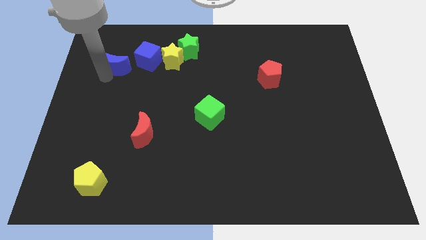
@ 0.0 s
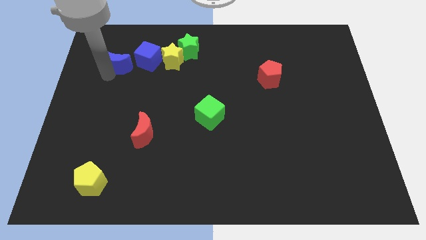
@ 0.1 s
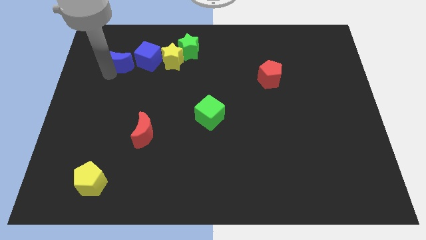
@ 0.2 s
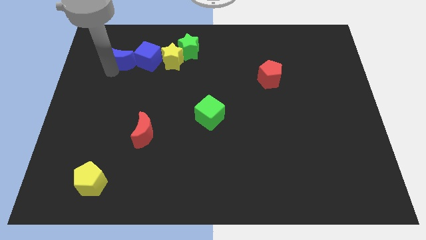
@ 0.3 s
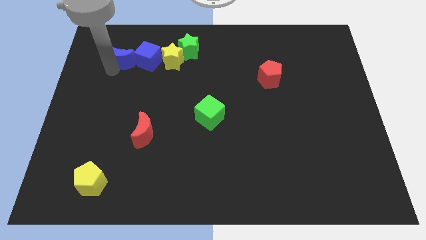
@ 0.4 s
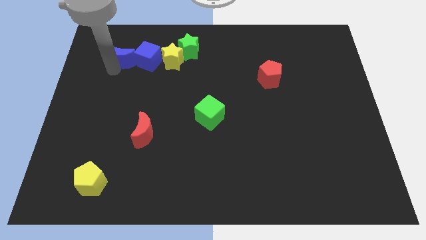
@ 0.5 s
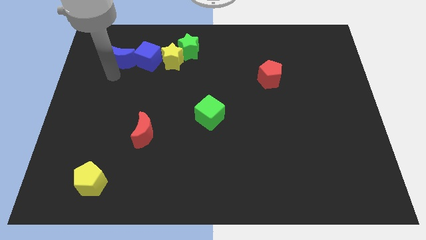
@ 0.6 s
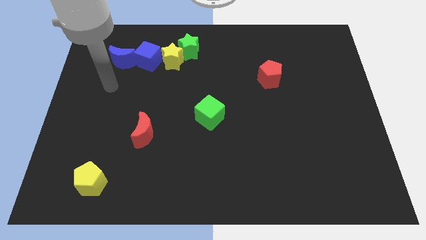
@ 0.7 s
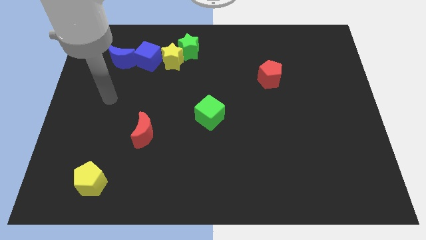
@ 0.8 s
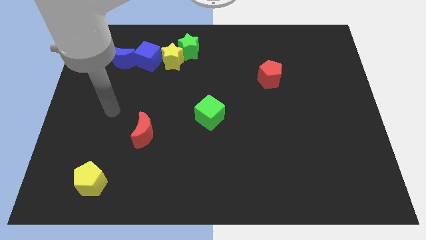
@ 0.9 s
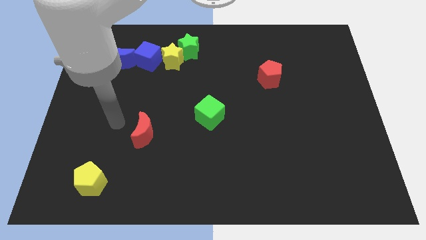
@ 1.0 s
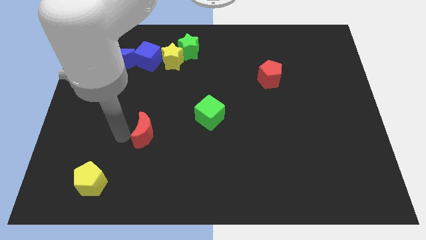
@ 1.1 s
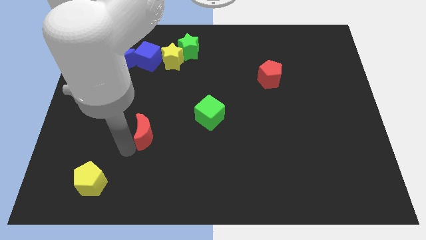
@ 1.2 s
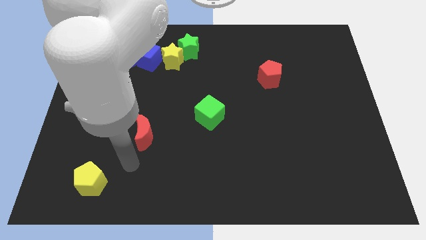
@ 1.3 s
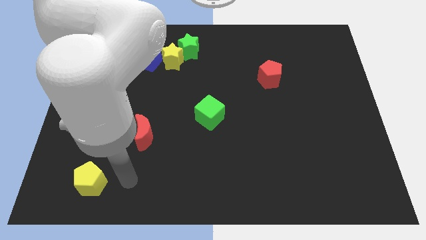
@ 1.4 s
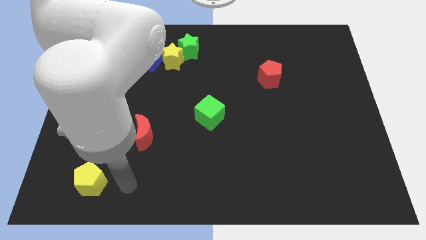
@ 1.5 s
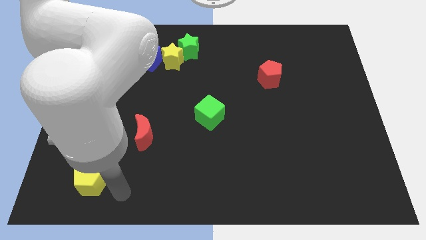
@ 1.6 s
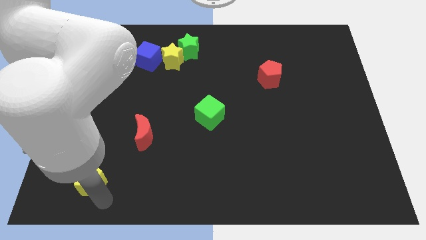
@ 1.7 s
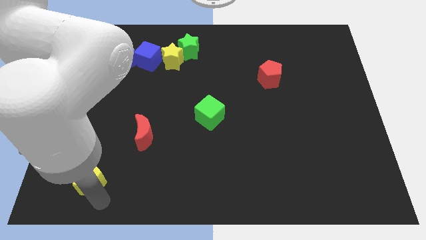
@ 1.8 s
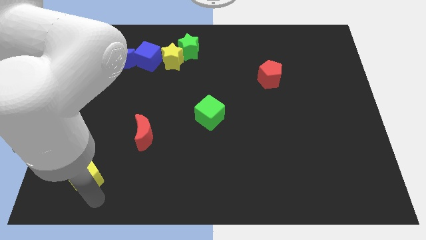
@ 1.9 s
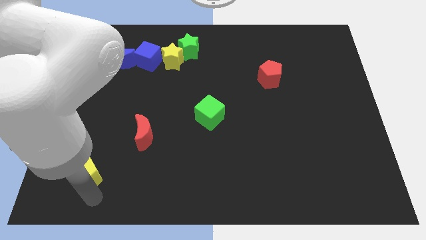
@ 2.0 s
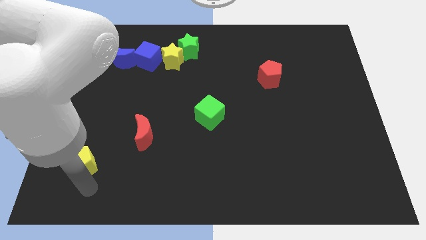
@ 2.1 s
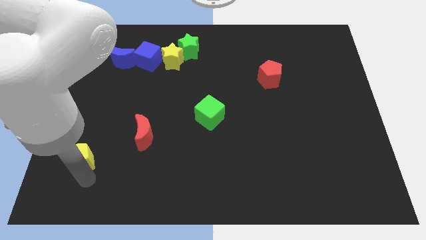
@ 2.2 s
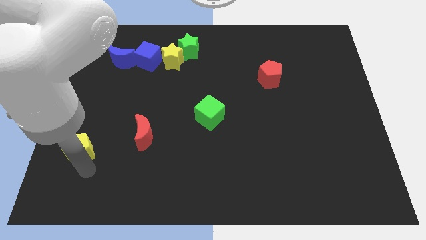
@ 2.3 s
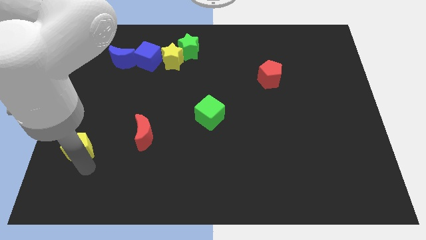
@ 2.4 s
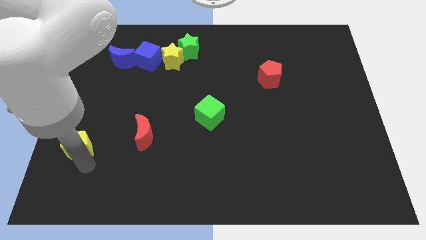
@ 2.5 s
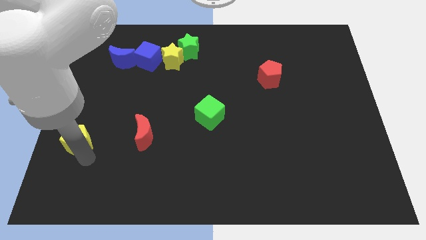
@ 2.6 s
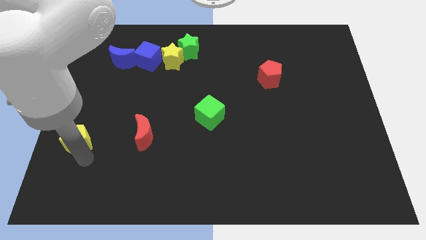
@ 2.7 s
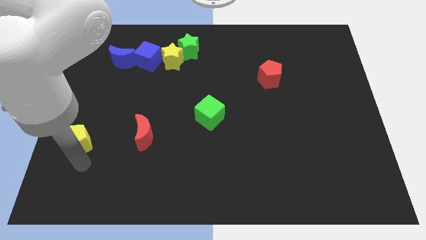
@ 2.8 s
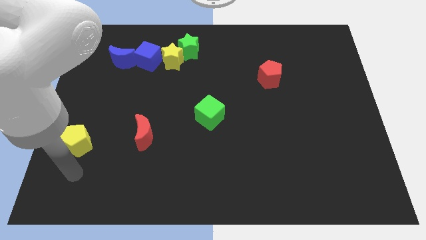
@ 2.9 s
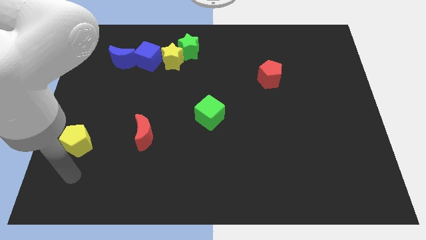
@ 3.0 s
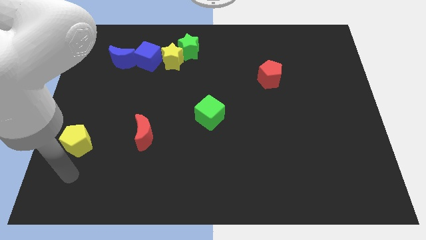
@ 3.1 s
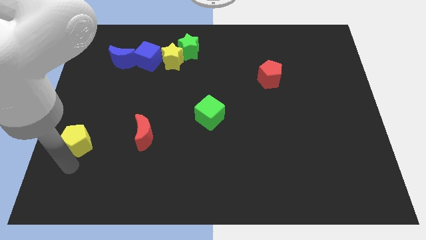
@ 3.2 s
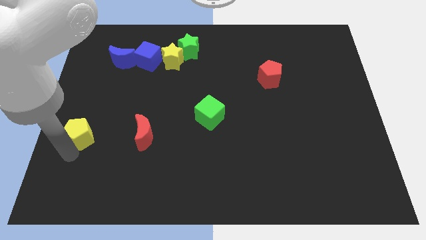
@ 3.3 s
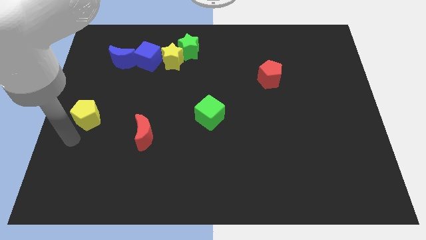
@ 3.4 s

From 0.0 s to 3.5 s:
push yellow pentagon beside red crescent

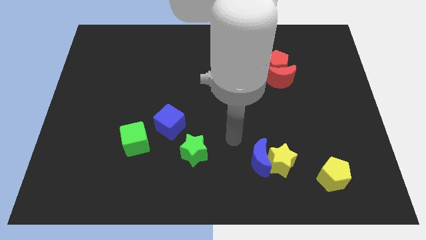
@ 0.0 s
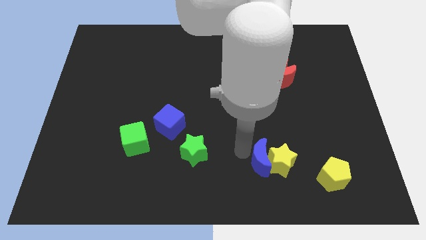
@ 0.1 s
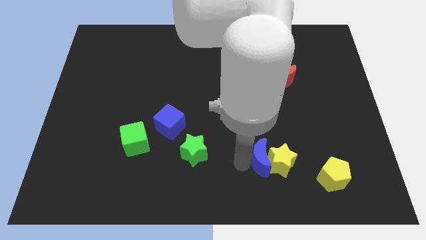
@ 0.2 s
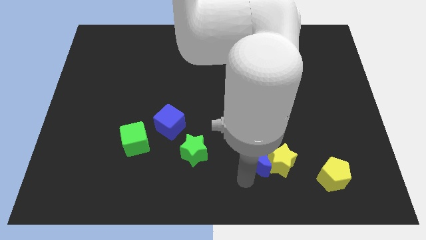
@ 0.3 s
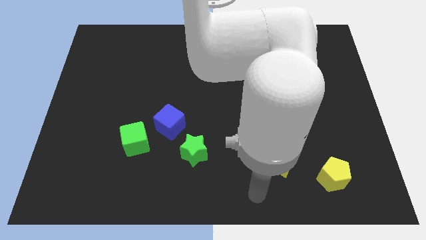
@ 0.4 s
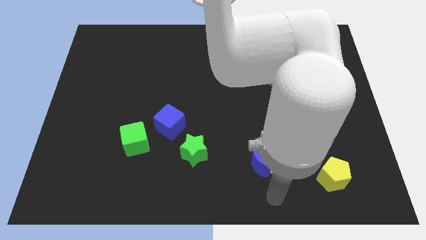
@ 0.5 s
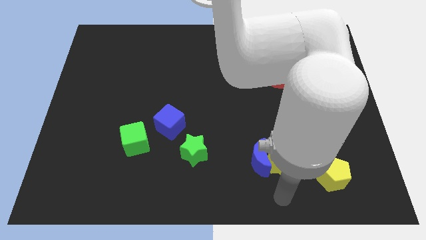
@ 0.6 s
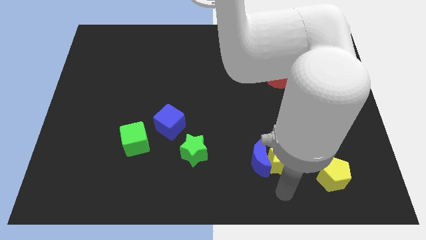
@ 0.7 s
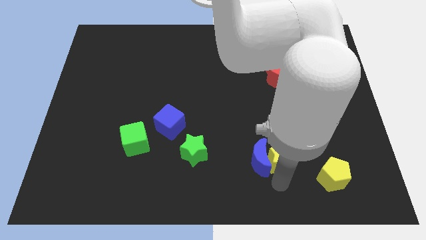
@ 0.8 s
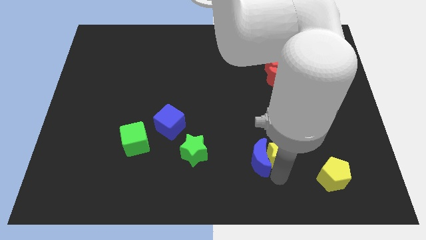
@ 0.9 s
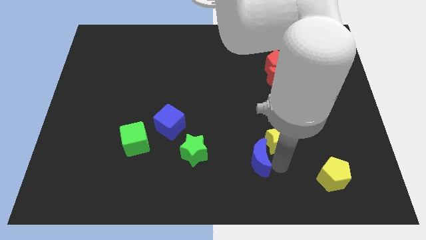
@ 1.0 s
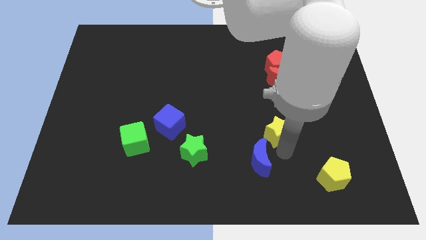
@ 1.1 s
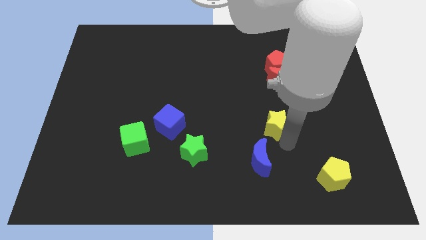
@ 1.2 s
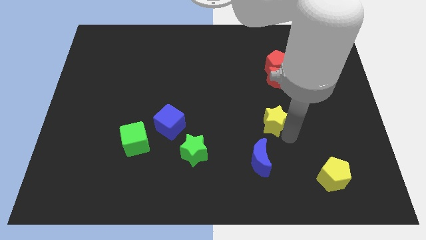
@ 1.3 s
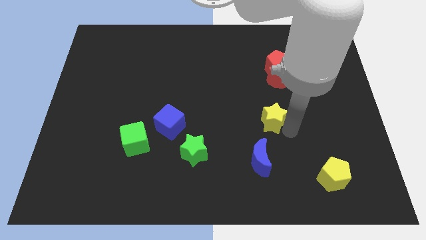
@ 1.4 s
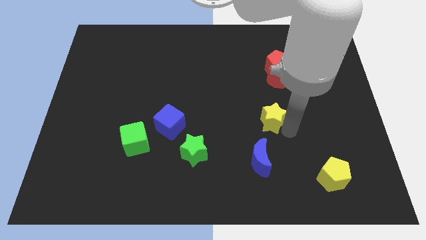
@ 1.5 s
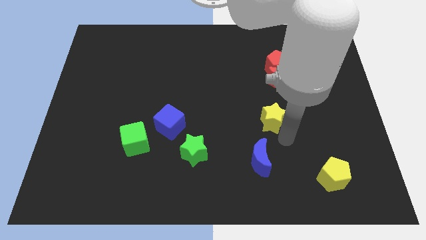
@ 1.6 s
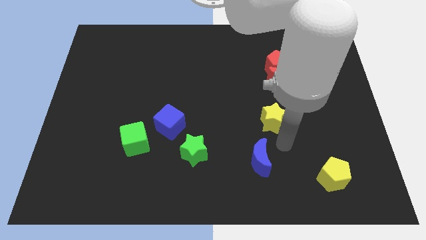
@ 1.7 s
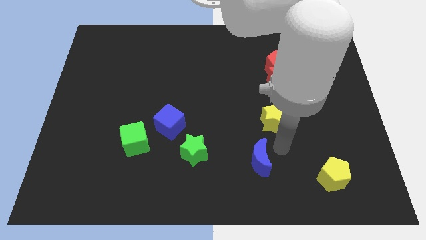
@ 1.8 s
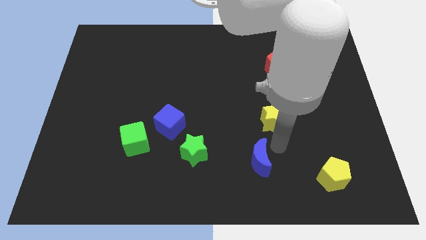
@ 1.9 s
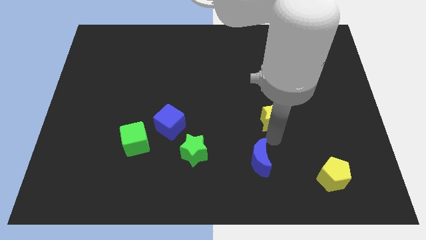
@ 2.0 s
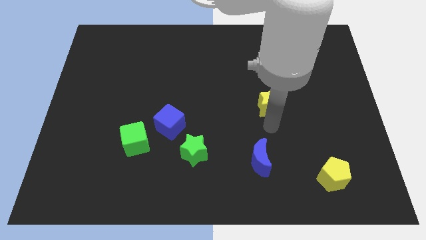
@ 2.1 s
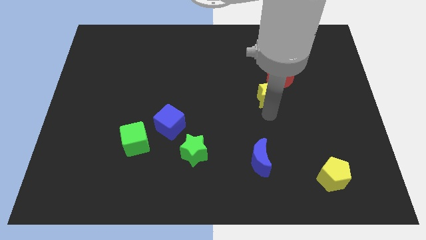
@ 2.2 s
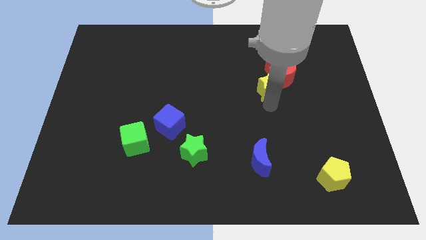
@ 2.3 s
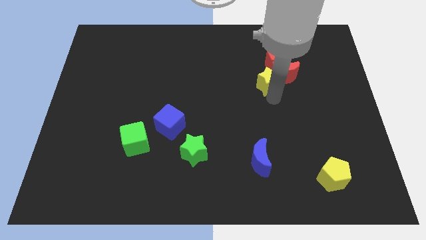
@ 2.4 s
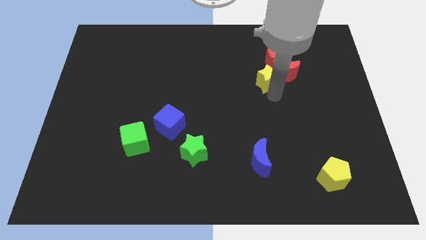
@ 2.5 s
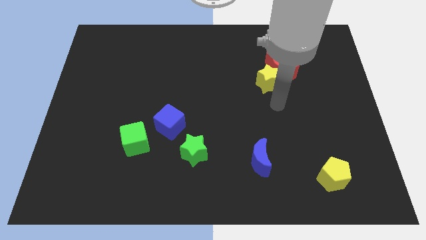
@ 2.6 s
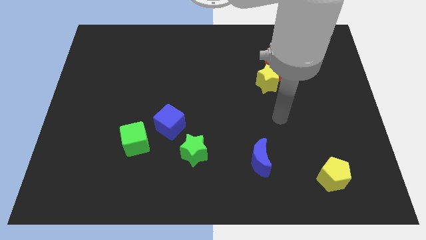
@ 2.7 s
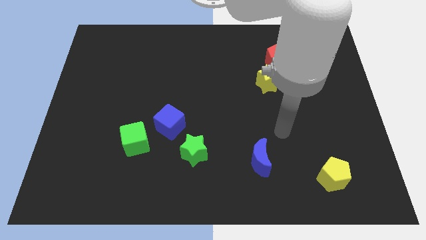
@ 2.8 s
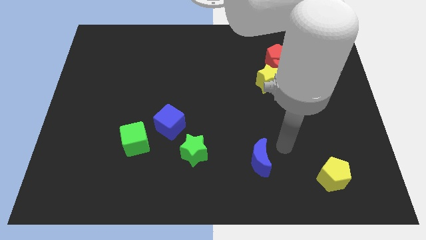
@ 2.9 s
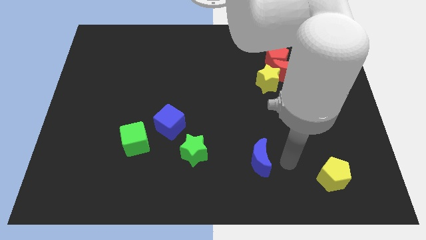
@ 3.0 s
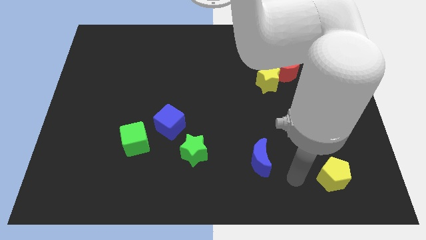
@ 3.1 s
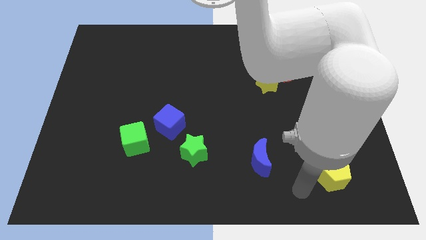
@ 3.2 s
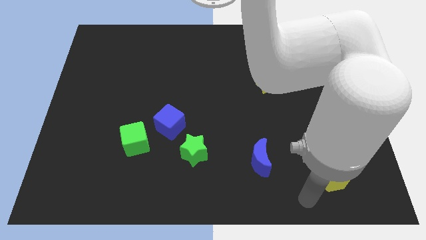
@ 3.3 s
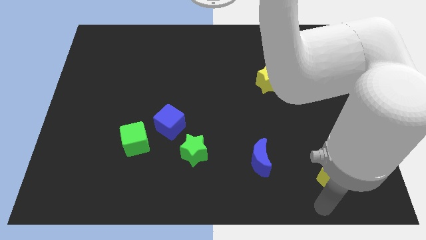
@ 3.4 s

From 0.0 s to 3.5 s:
push the yellow star into the red moon

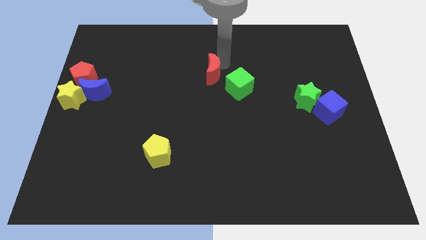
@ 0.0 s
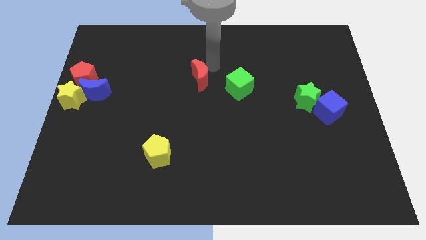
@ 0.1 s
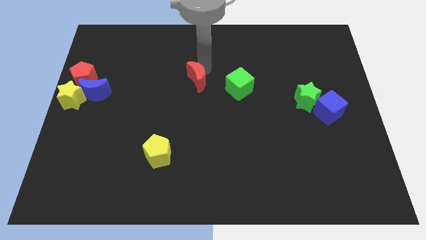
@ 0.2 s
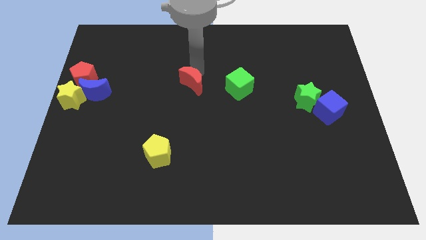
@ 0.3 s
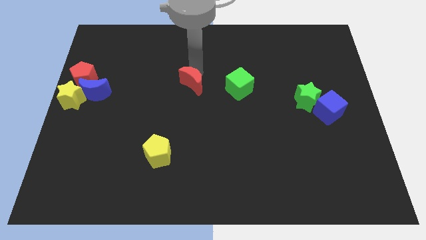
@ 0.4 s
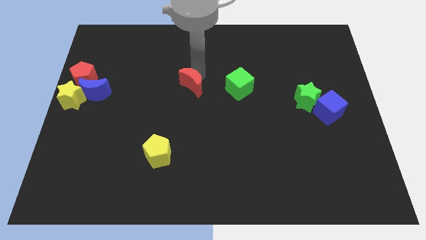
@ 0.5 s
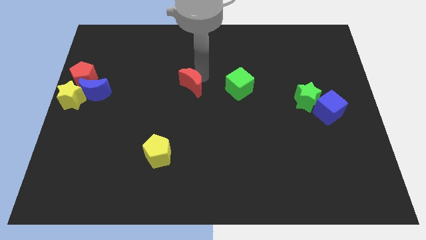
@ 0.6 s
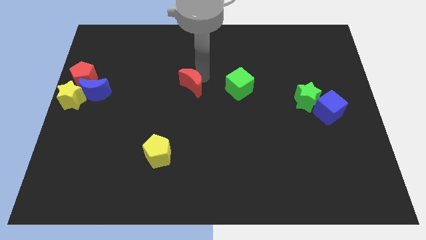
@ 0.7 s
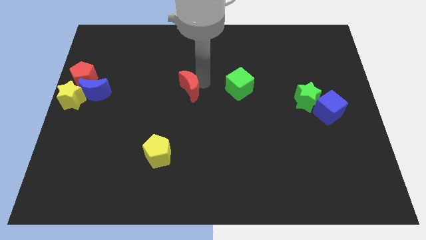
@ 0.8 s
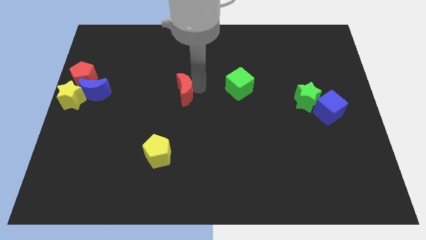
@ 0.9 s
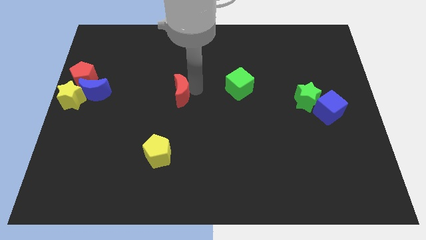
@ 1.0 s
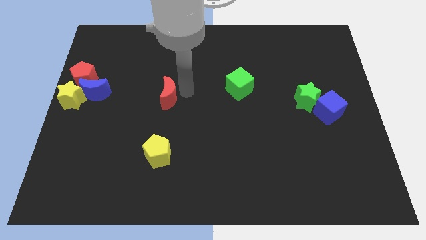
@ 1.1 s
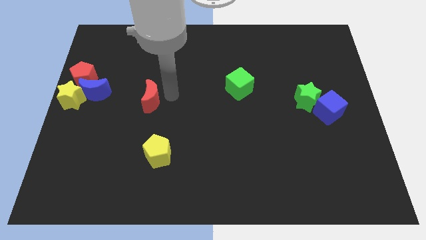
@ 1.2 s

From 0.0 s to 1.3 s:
move the red moon vertically above the yellow pentagon

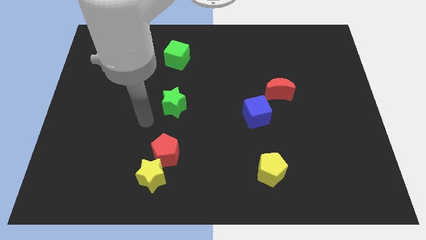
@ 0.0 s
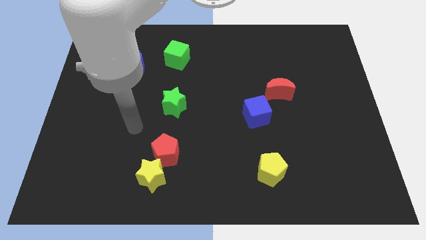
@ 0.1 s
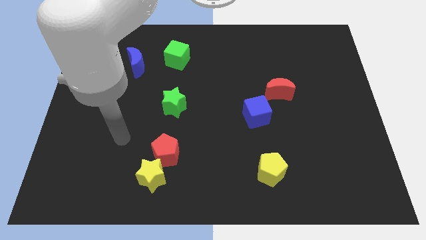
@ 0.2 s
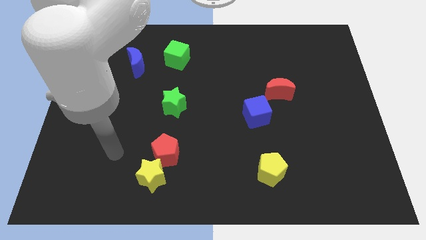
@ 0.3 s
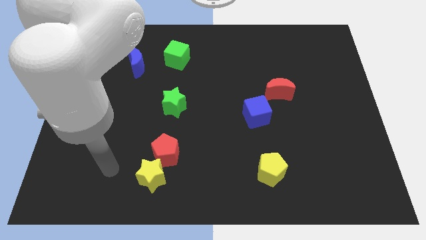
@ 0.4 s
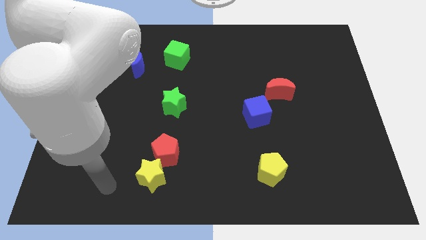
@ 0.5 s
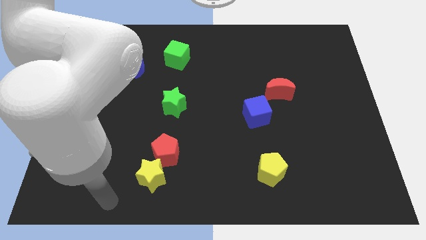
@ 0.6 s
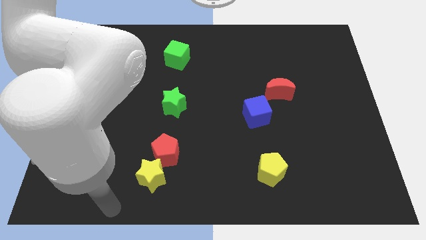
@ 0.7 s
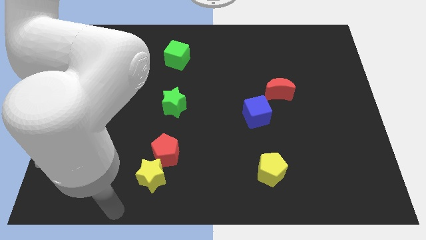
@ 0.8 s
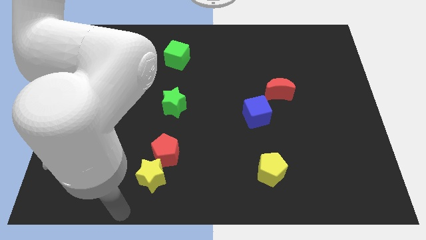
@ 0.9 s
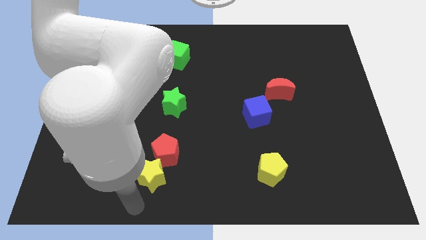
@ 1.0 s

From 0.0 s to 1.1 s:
move your arm to the bottom of the yellow star
